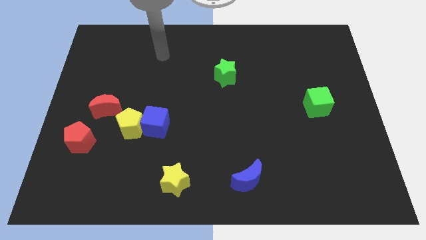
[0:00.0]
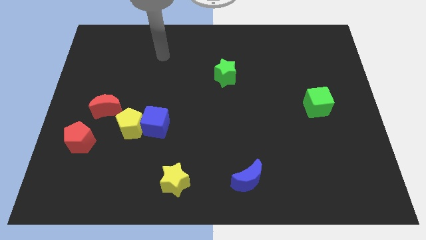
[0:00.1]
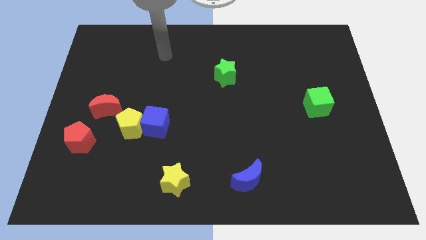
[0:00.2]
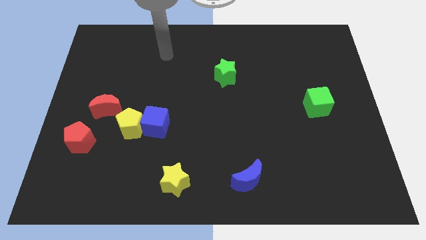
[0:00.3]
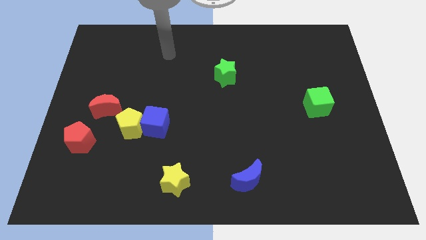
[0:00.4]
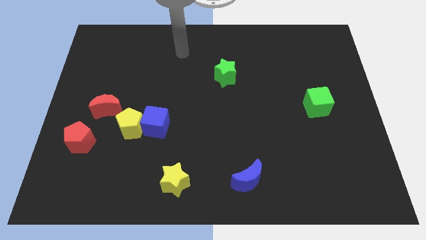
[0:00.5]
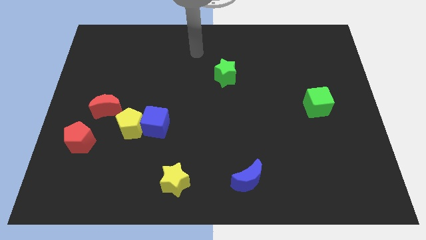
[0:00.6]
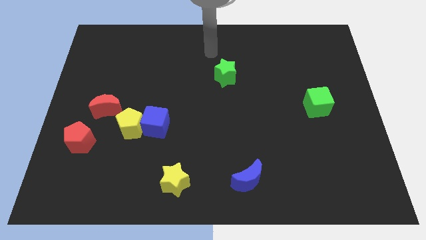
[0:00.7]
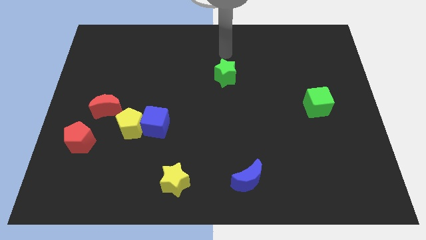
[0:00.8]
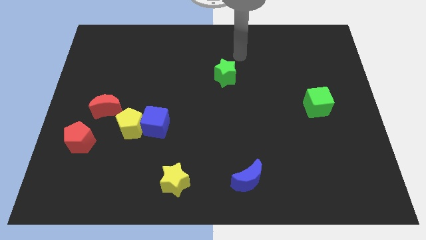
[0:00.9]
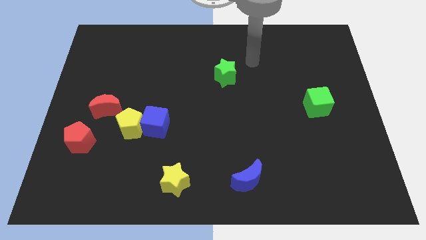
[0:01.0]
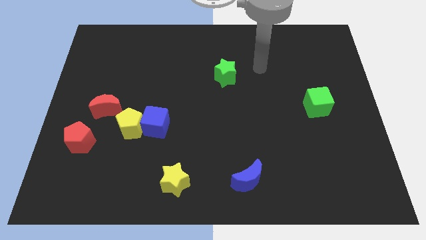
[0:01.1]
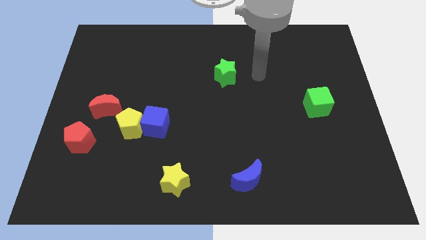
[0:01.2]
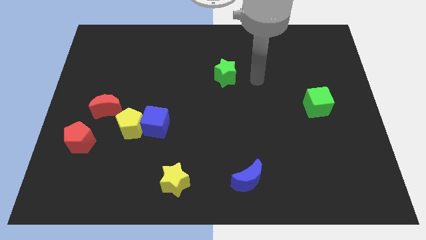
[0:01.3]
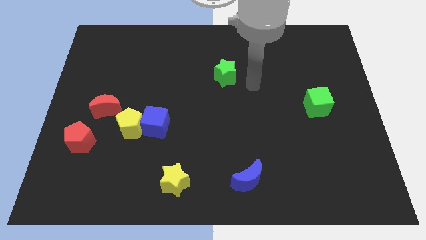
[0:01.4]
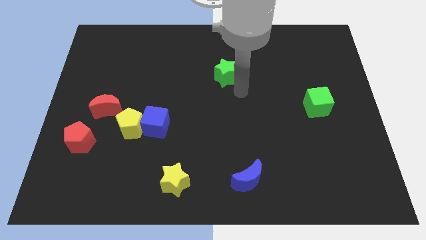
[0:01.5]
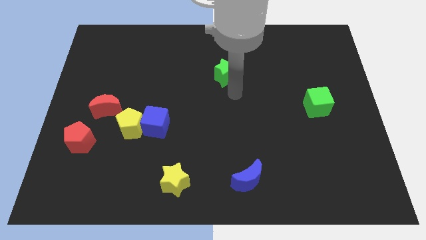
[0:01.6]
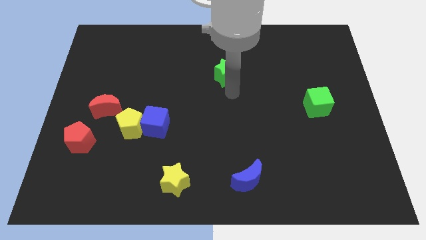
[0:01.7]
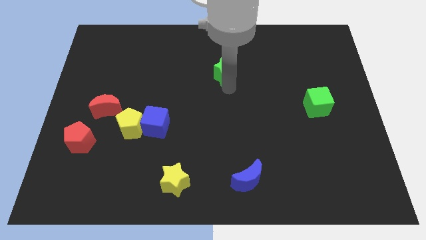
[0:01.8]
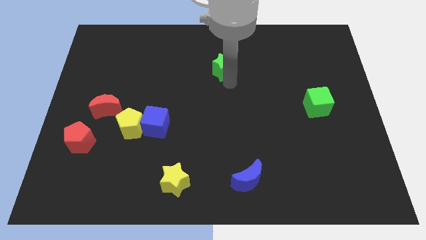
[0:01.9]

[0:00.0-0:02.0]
move your arm close to the green star

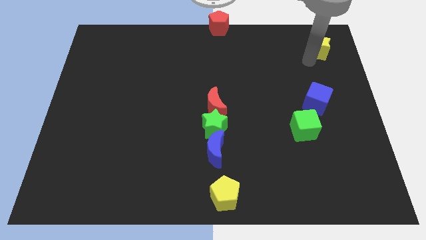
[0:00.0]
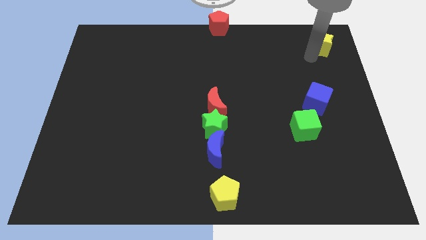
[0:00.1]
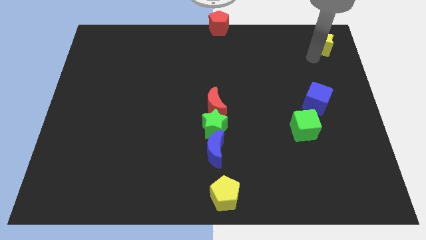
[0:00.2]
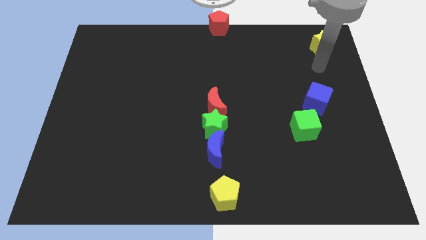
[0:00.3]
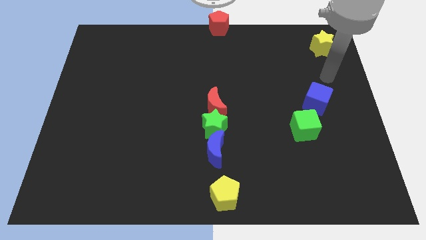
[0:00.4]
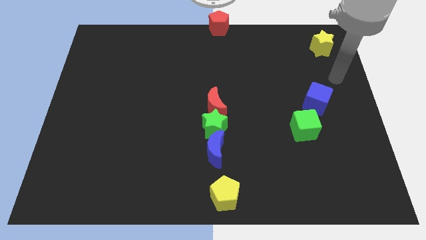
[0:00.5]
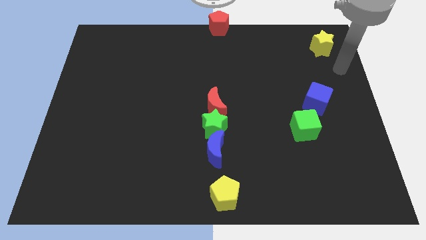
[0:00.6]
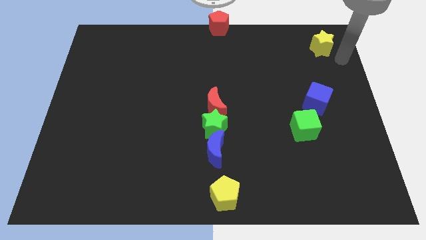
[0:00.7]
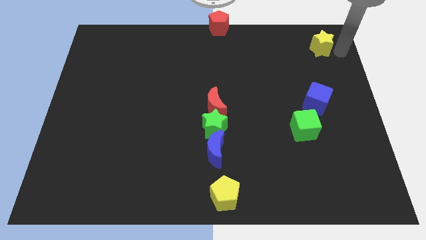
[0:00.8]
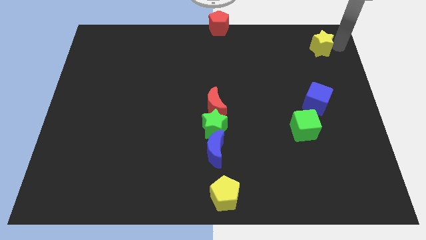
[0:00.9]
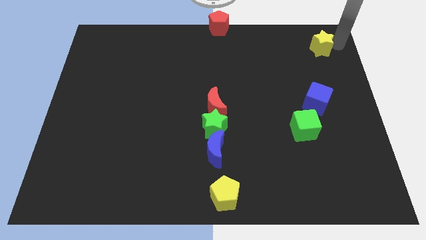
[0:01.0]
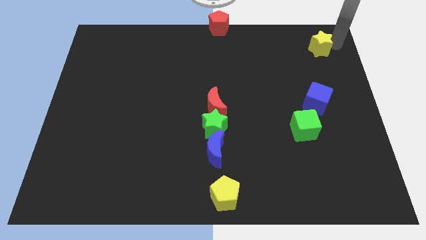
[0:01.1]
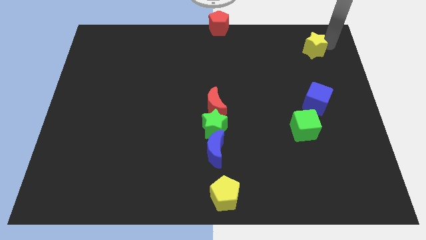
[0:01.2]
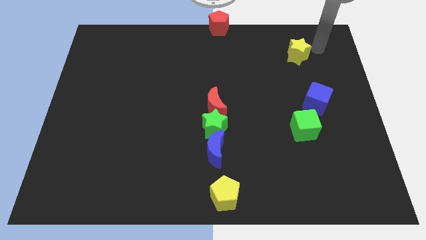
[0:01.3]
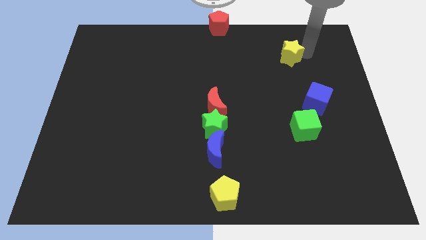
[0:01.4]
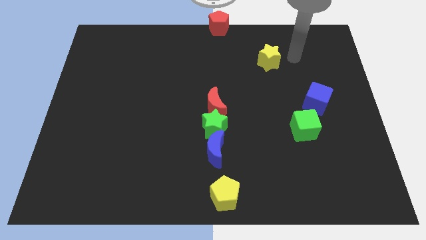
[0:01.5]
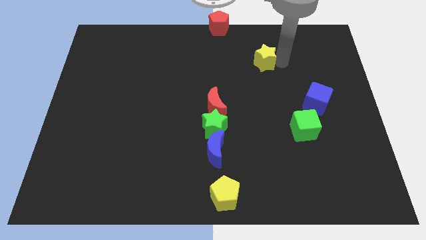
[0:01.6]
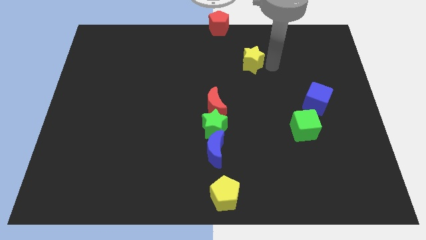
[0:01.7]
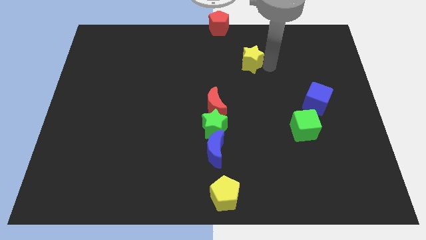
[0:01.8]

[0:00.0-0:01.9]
push the yellow star towards the red moon

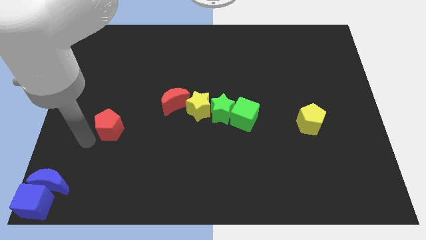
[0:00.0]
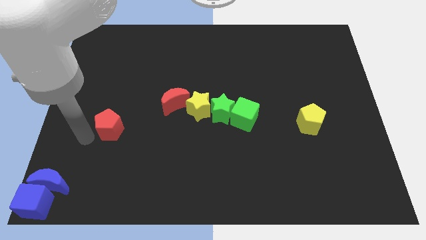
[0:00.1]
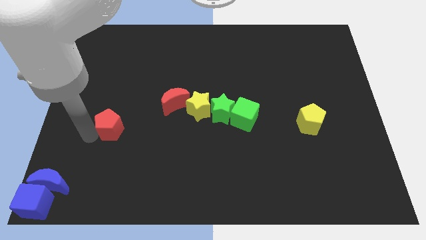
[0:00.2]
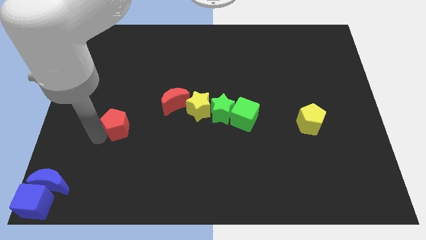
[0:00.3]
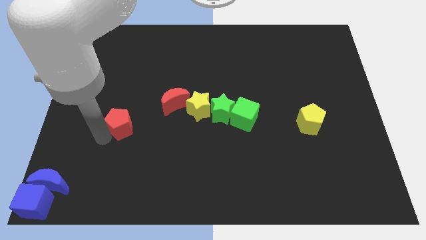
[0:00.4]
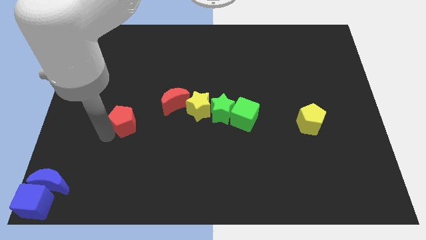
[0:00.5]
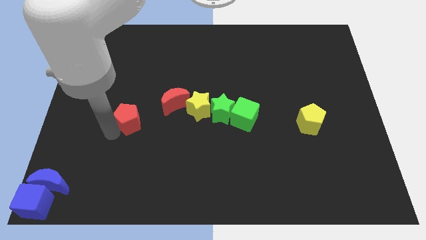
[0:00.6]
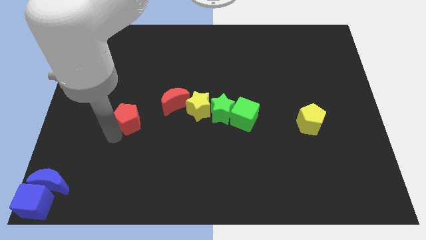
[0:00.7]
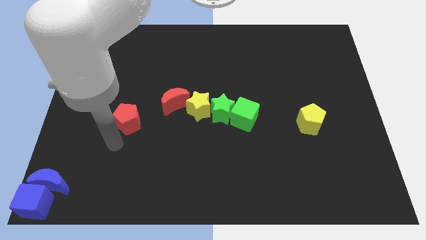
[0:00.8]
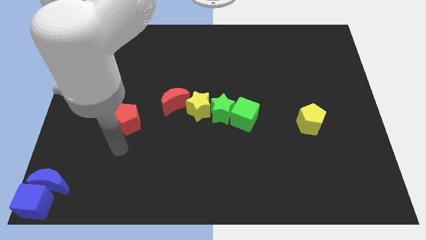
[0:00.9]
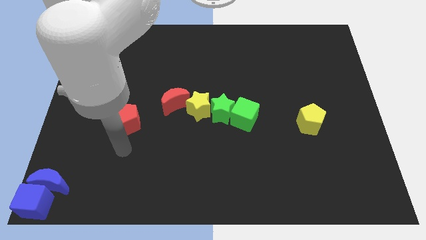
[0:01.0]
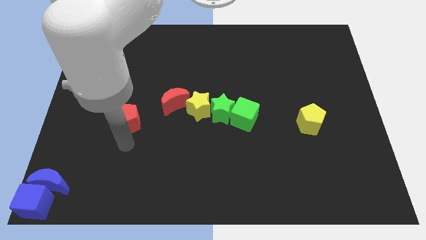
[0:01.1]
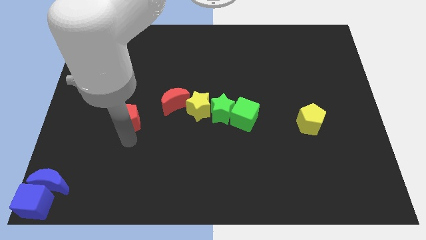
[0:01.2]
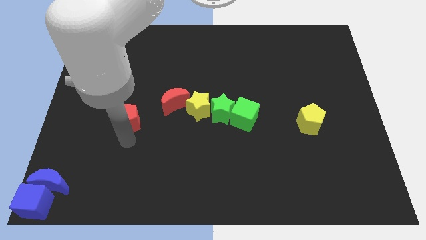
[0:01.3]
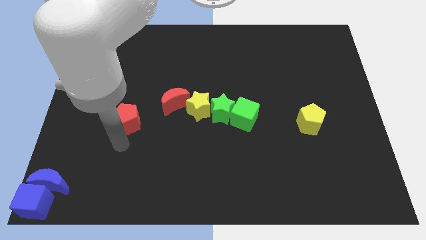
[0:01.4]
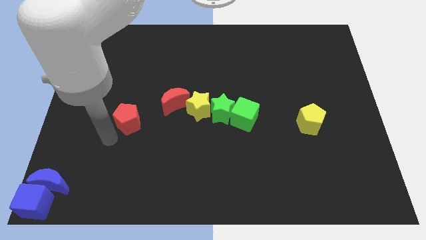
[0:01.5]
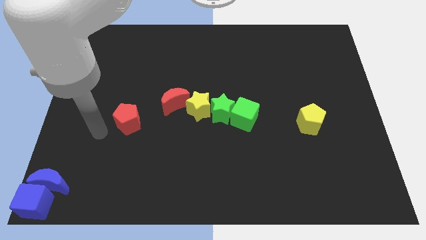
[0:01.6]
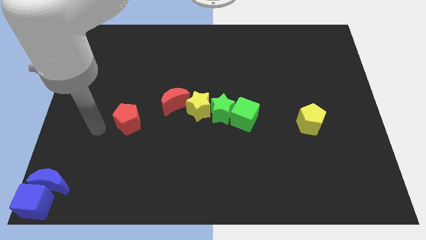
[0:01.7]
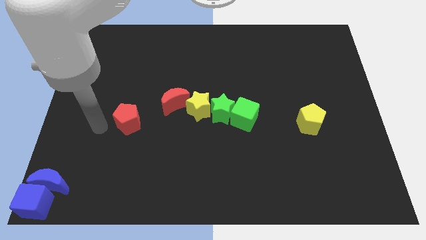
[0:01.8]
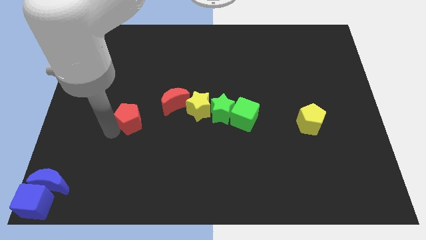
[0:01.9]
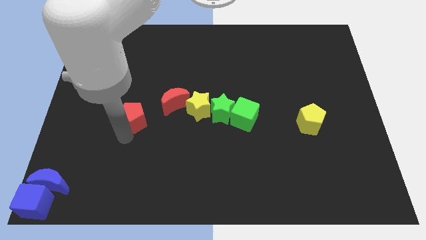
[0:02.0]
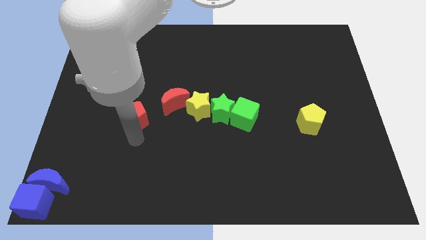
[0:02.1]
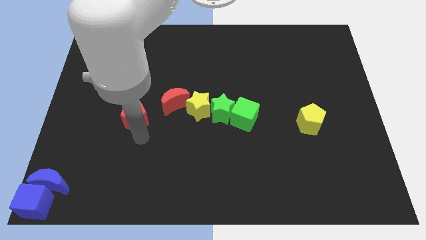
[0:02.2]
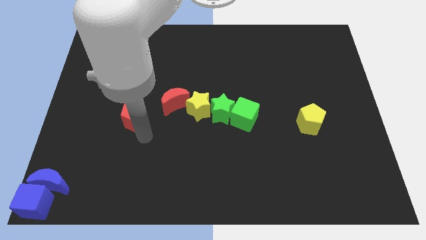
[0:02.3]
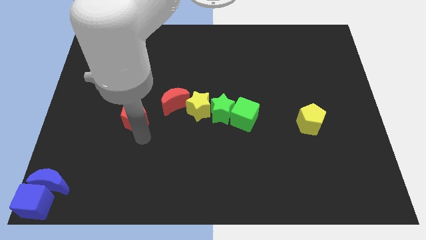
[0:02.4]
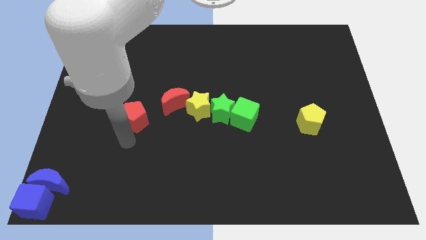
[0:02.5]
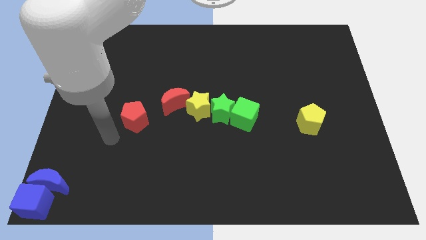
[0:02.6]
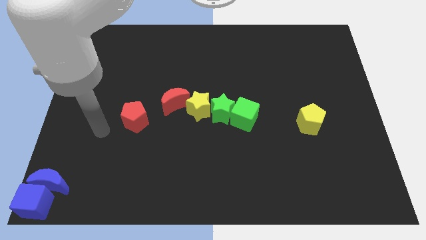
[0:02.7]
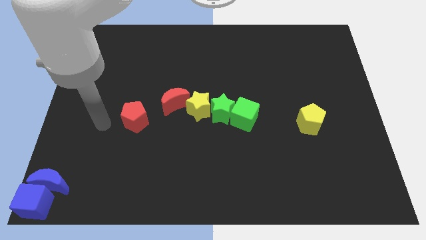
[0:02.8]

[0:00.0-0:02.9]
place the red pentagon diagonal diagonal below red moon to the left

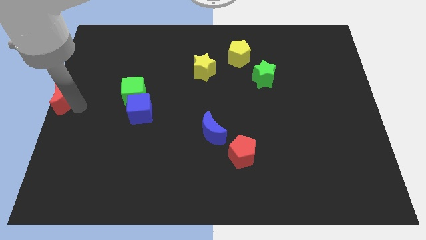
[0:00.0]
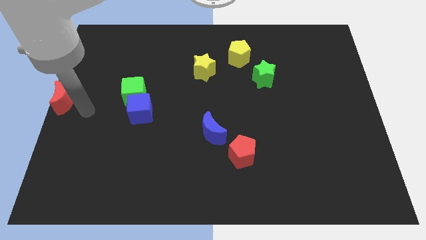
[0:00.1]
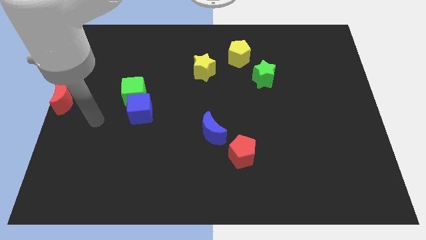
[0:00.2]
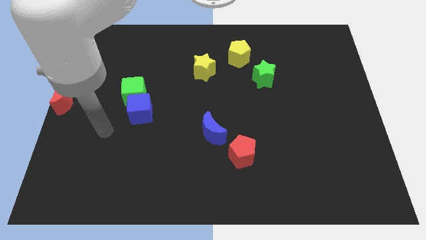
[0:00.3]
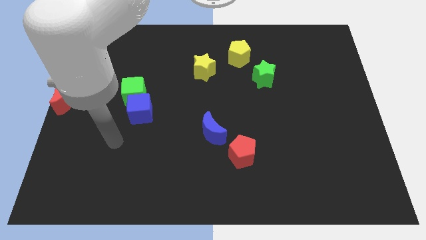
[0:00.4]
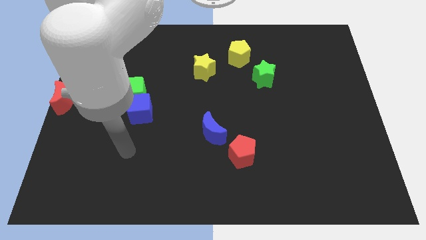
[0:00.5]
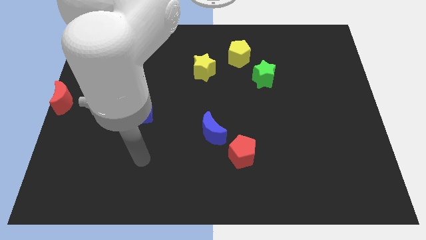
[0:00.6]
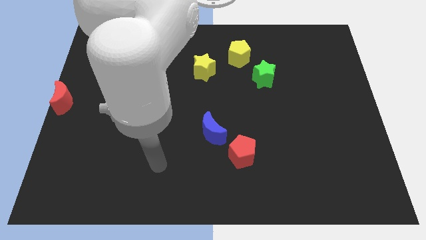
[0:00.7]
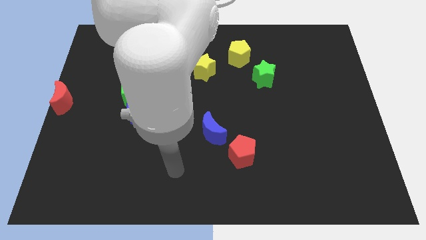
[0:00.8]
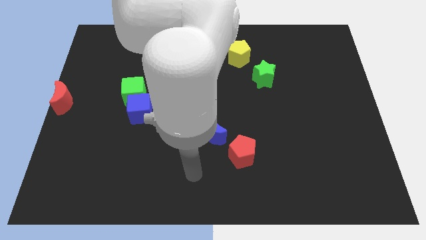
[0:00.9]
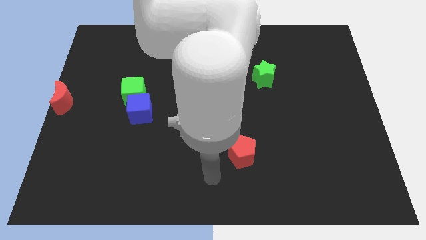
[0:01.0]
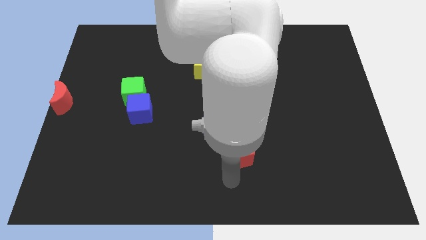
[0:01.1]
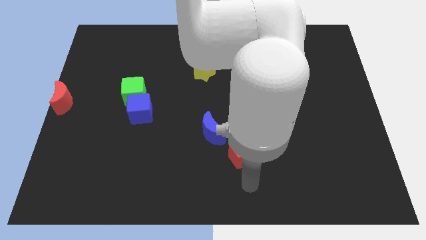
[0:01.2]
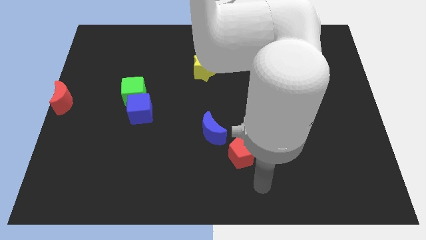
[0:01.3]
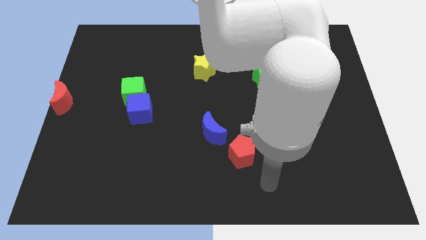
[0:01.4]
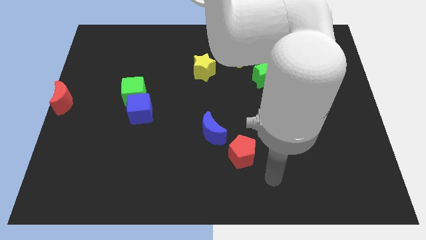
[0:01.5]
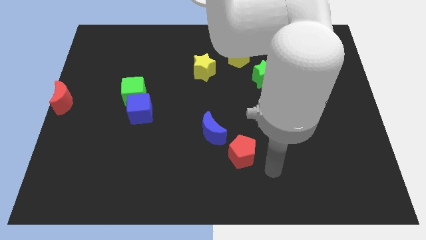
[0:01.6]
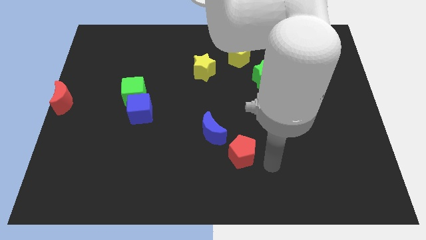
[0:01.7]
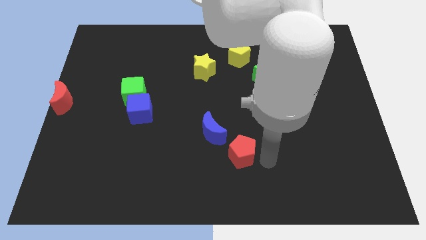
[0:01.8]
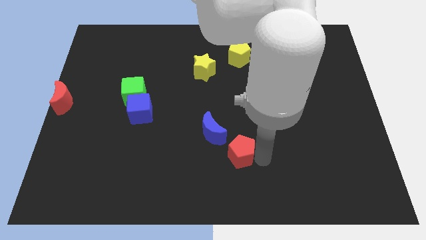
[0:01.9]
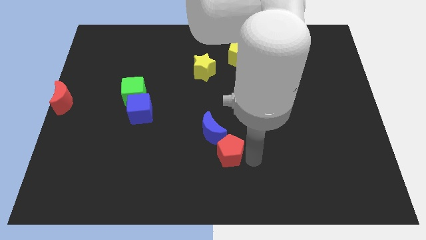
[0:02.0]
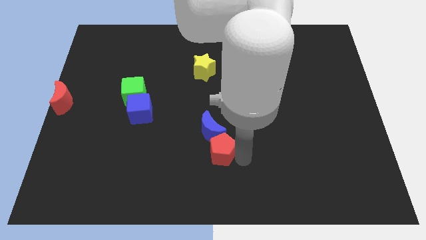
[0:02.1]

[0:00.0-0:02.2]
push the red pentagon into the blue moon

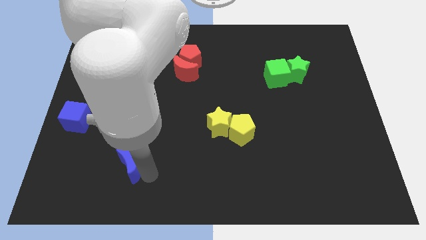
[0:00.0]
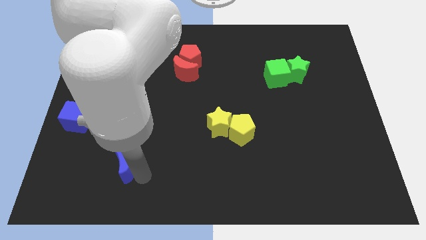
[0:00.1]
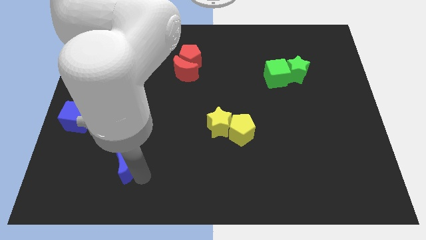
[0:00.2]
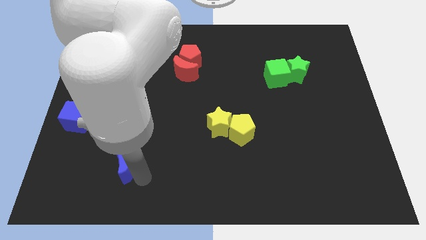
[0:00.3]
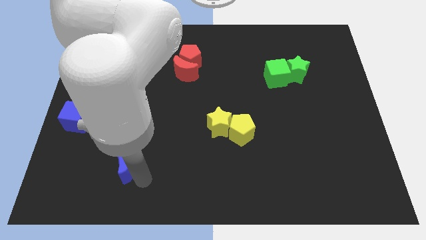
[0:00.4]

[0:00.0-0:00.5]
move the blue crescent slightly to the left of the board
